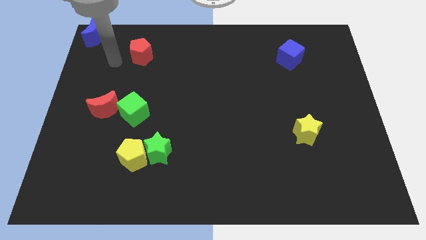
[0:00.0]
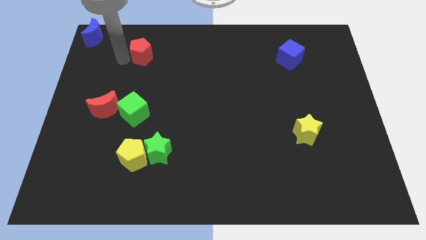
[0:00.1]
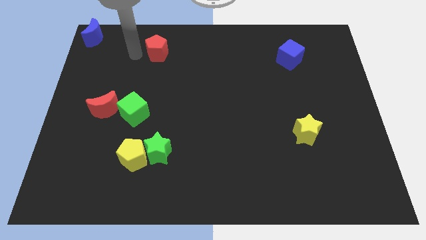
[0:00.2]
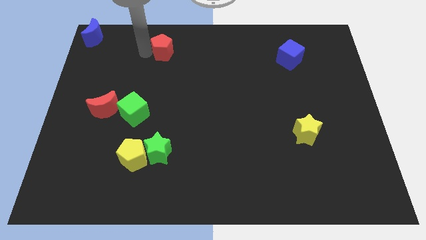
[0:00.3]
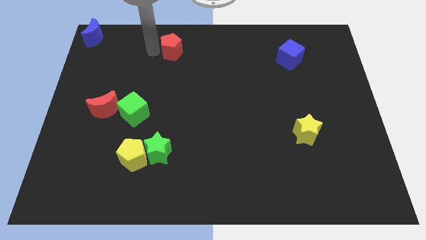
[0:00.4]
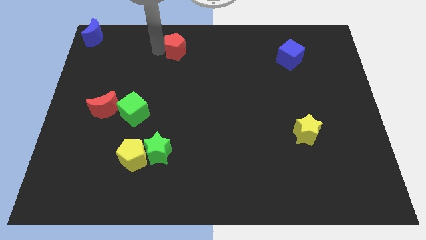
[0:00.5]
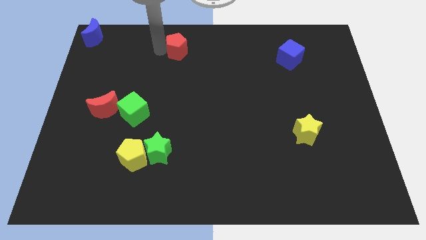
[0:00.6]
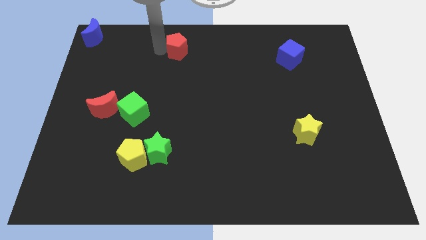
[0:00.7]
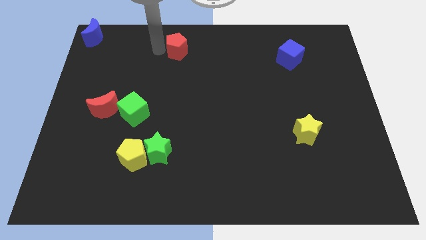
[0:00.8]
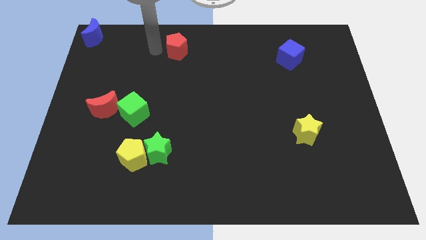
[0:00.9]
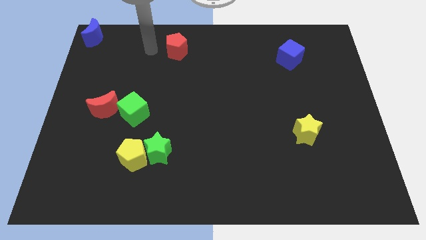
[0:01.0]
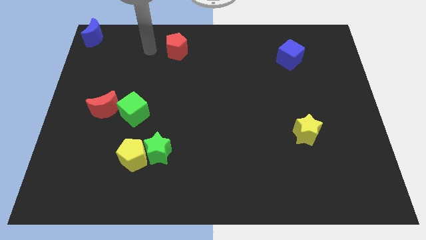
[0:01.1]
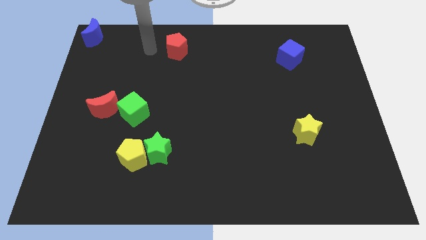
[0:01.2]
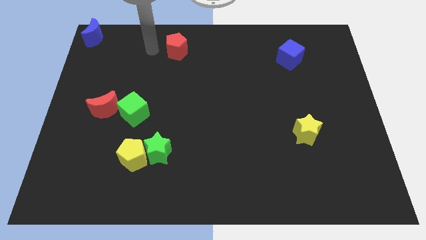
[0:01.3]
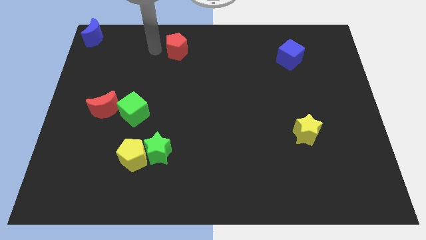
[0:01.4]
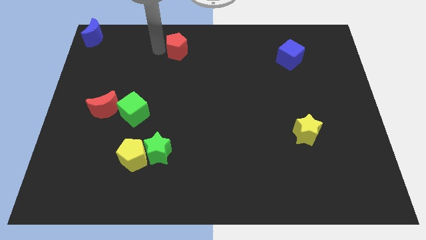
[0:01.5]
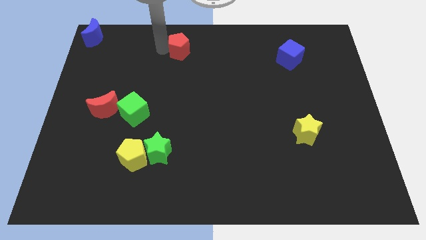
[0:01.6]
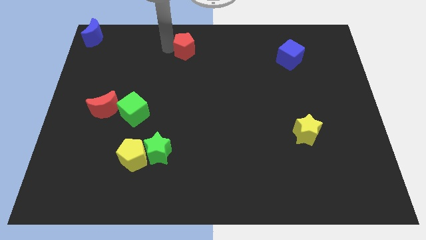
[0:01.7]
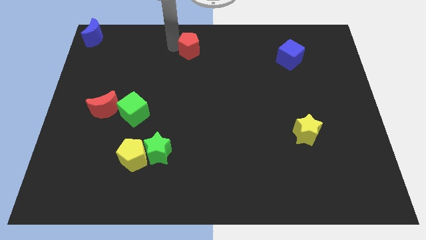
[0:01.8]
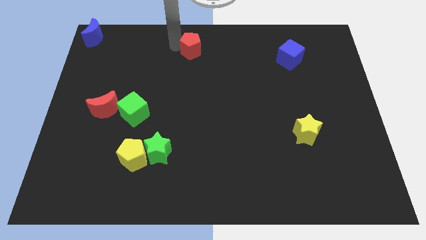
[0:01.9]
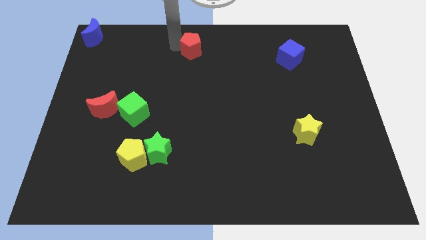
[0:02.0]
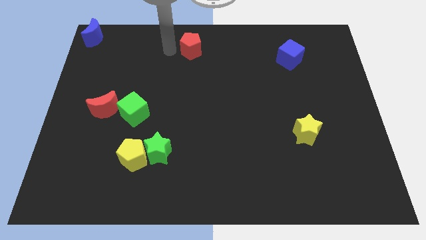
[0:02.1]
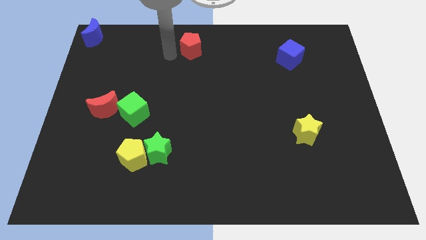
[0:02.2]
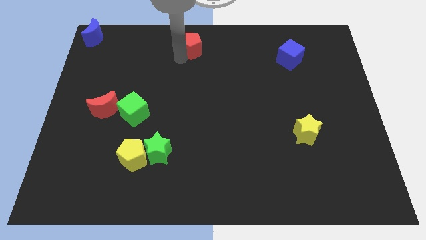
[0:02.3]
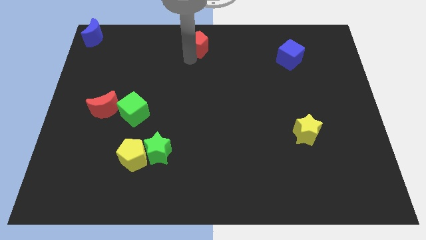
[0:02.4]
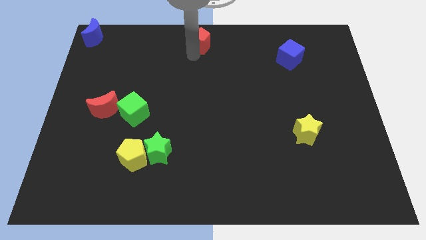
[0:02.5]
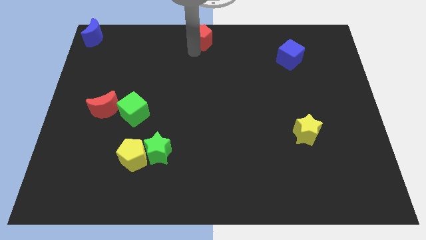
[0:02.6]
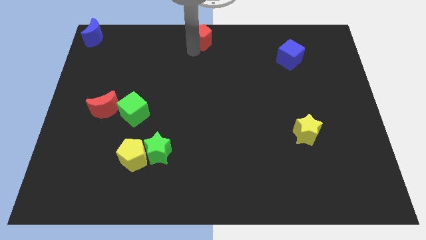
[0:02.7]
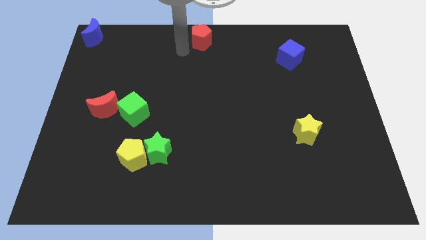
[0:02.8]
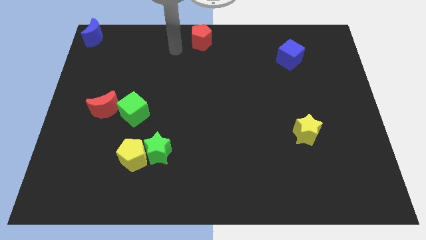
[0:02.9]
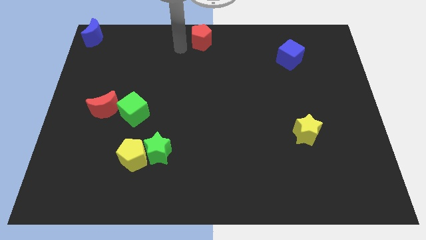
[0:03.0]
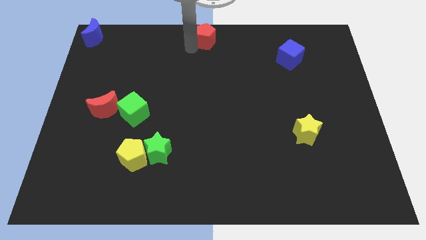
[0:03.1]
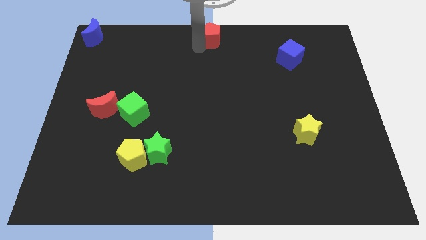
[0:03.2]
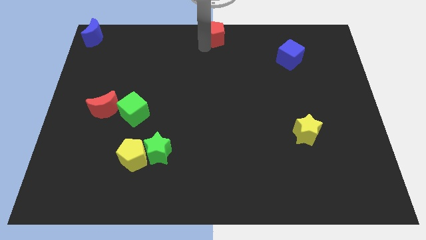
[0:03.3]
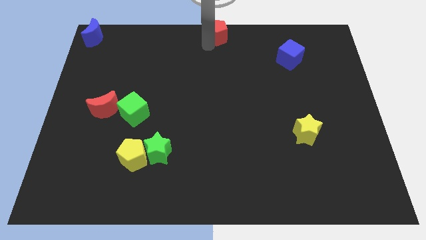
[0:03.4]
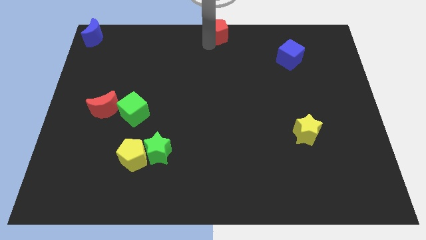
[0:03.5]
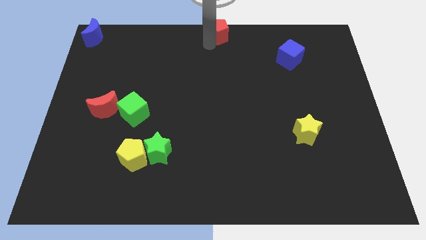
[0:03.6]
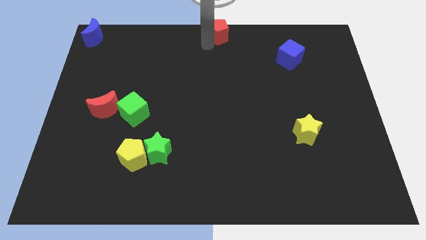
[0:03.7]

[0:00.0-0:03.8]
place the red pentagon towards the top center of the board

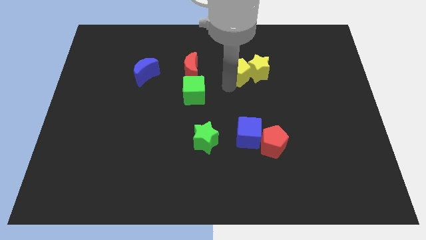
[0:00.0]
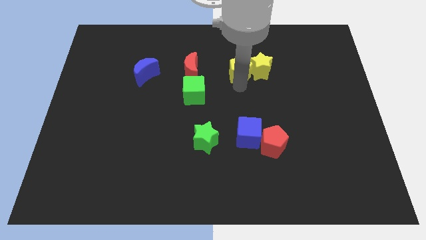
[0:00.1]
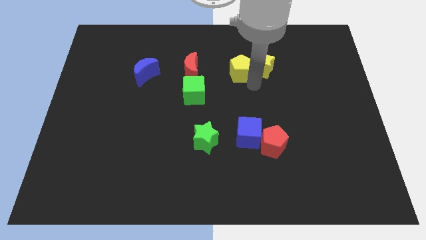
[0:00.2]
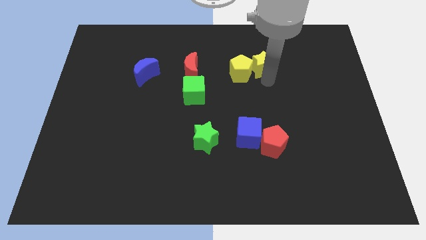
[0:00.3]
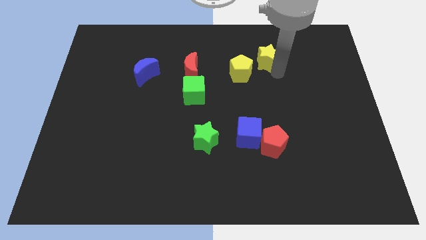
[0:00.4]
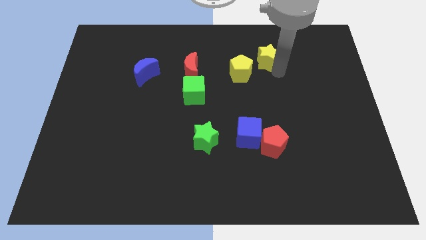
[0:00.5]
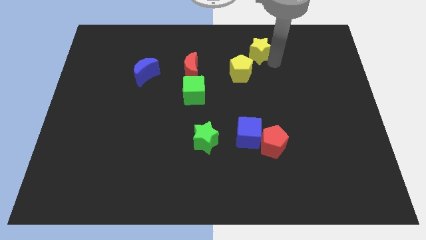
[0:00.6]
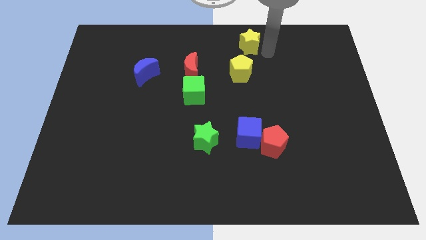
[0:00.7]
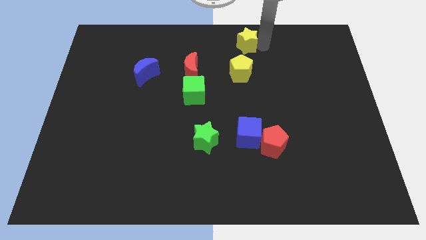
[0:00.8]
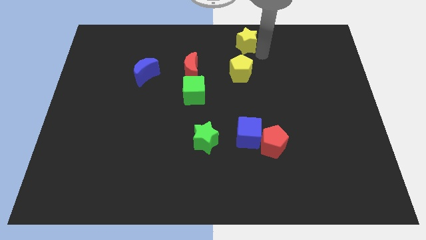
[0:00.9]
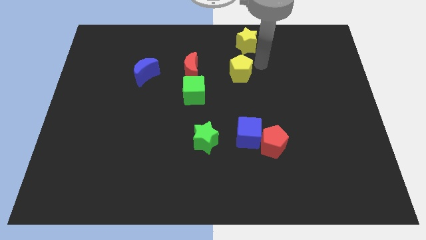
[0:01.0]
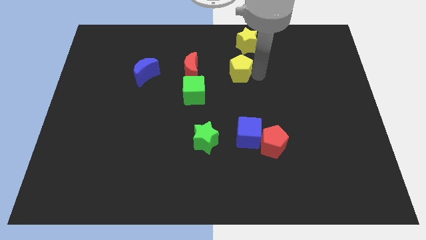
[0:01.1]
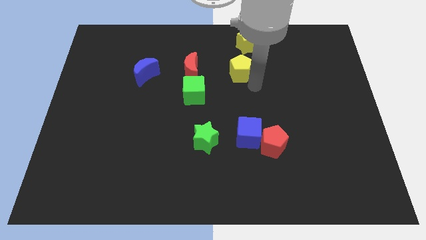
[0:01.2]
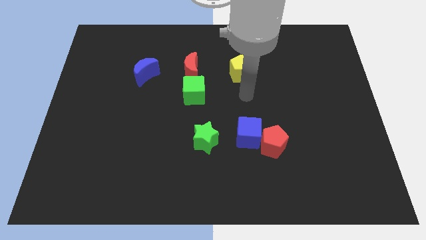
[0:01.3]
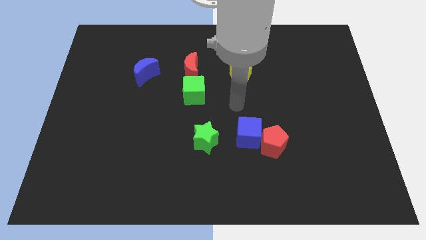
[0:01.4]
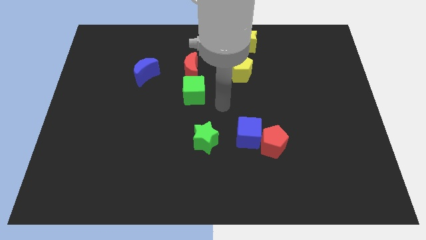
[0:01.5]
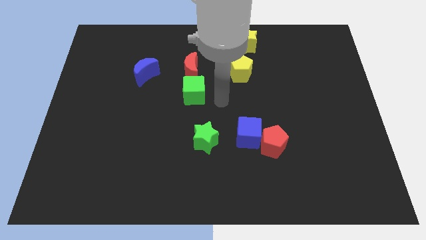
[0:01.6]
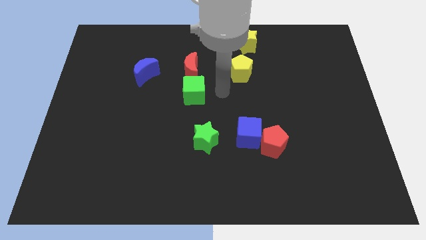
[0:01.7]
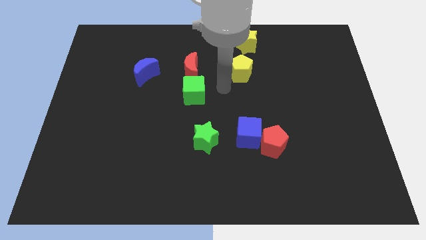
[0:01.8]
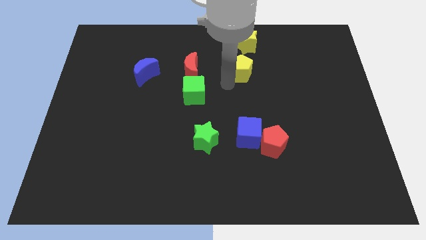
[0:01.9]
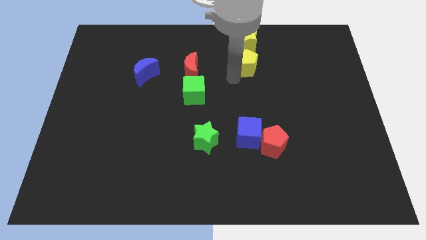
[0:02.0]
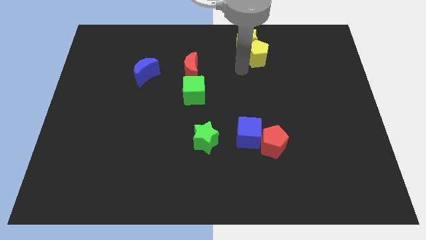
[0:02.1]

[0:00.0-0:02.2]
move the yellow star to the top of the yellow pentagon

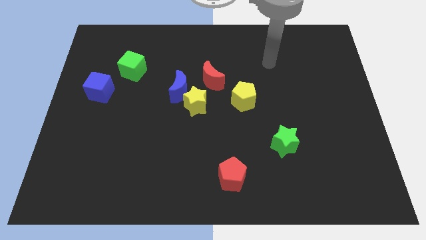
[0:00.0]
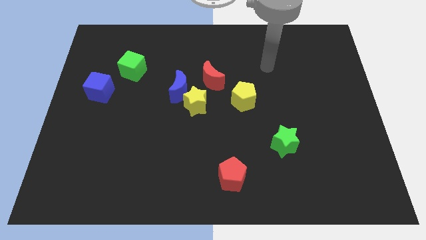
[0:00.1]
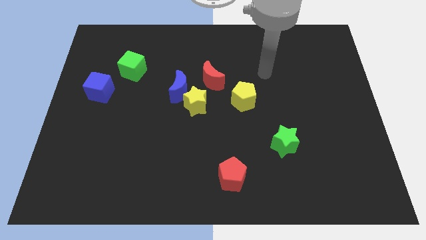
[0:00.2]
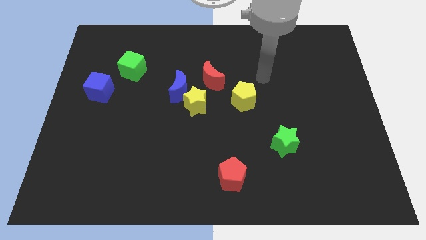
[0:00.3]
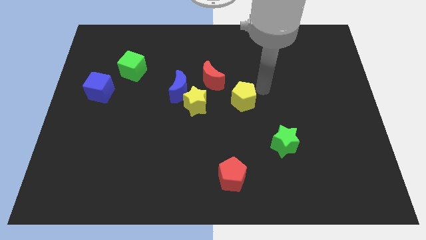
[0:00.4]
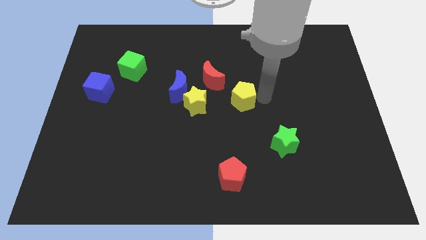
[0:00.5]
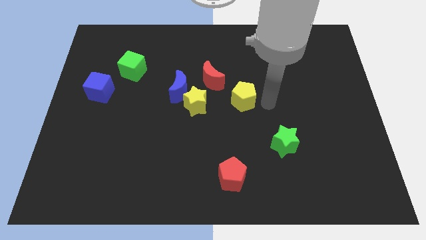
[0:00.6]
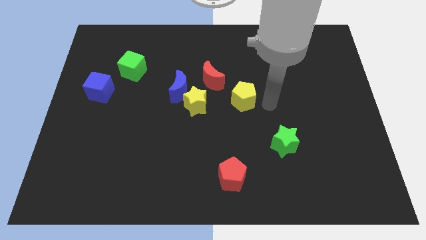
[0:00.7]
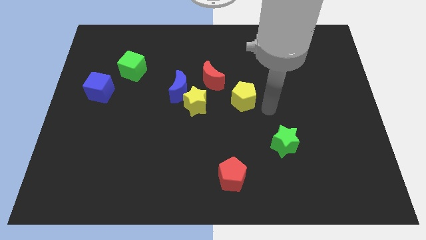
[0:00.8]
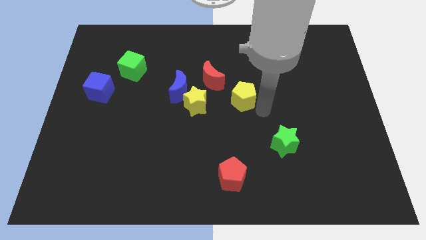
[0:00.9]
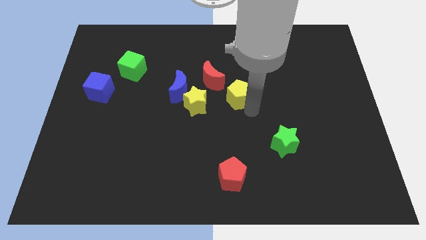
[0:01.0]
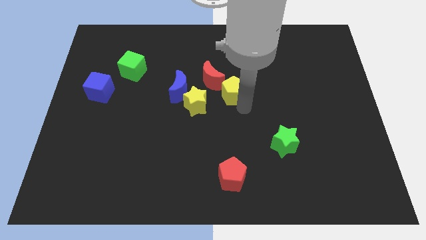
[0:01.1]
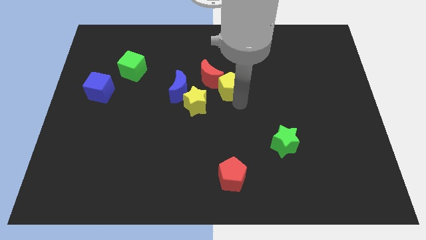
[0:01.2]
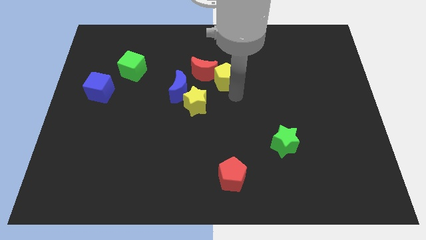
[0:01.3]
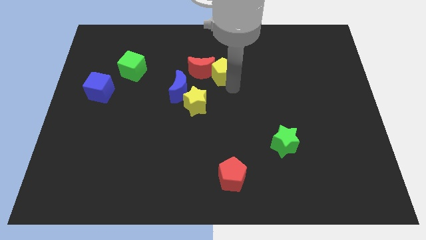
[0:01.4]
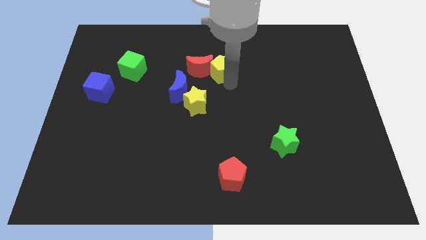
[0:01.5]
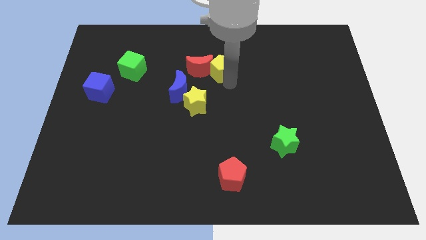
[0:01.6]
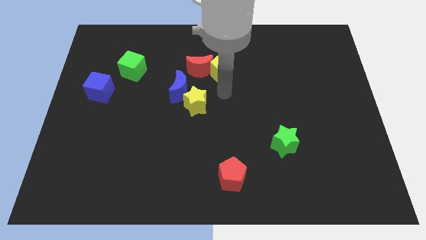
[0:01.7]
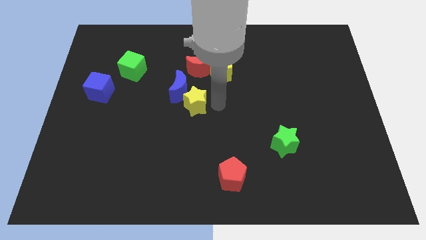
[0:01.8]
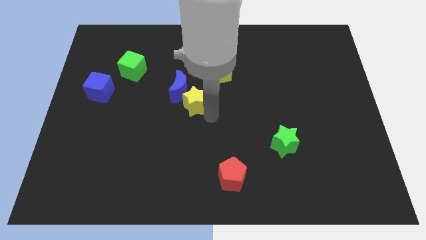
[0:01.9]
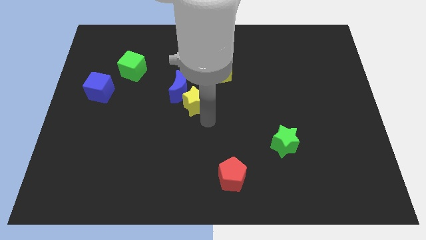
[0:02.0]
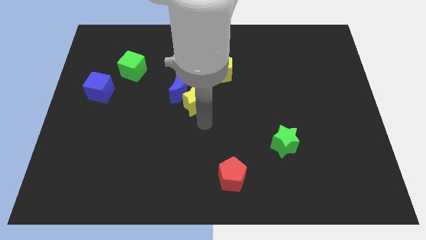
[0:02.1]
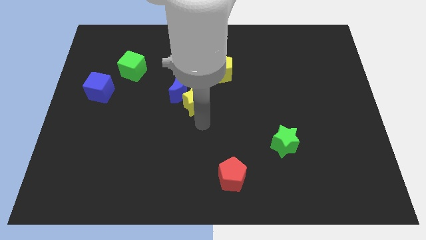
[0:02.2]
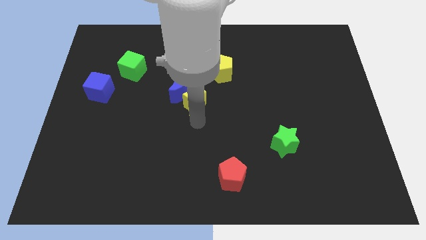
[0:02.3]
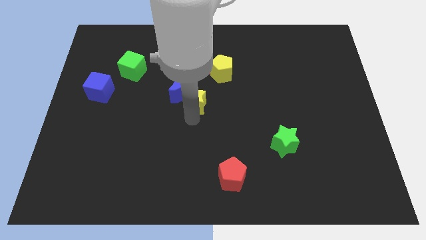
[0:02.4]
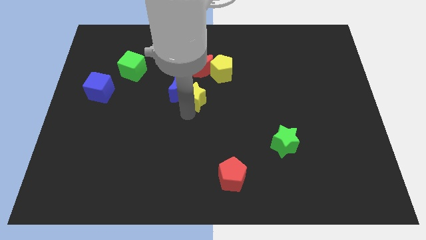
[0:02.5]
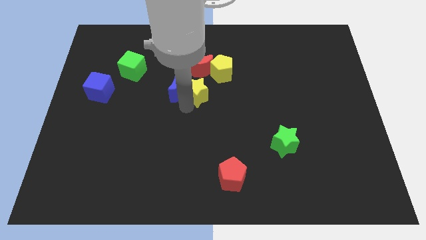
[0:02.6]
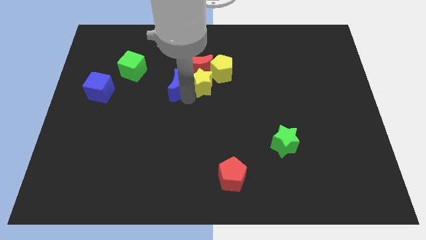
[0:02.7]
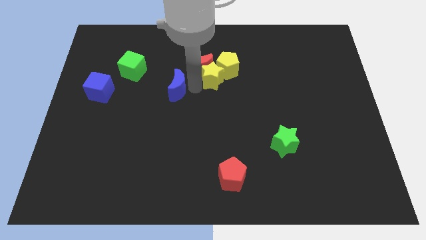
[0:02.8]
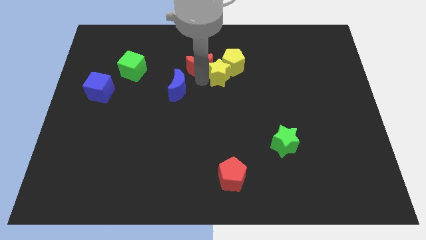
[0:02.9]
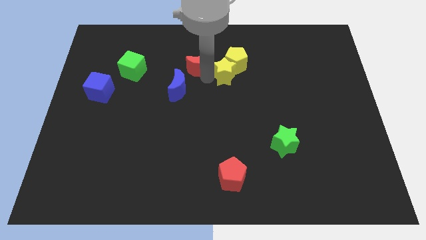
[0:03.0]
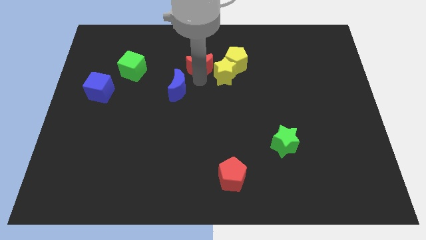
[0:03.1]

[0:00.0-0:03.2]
push the yellow pentagon towards the red crescent
